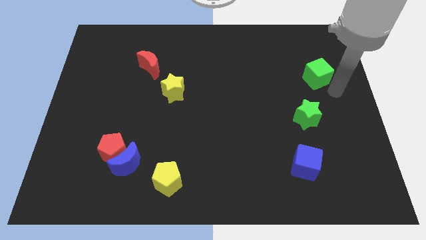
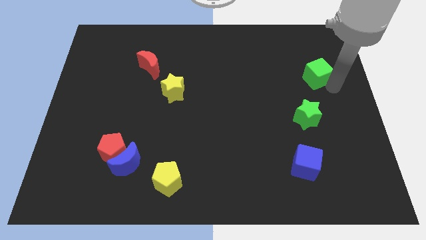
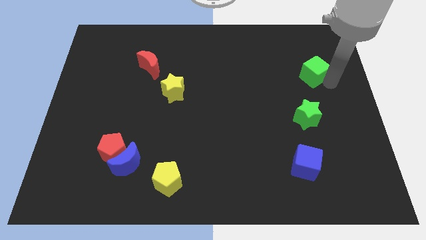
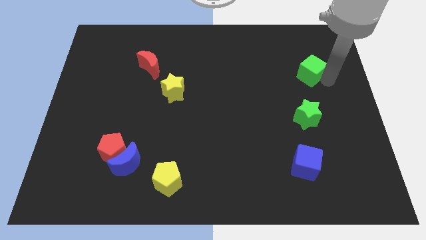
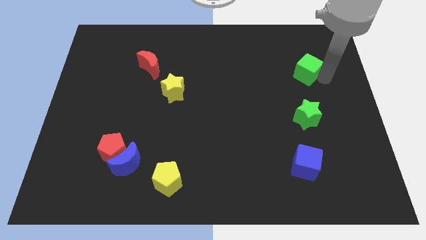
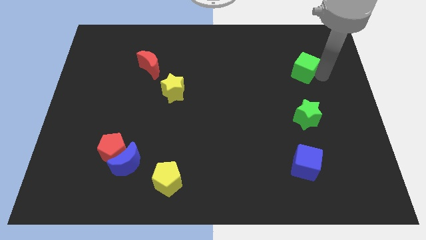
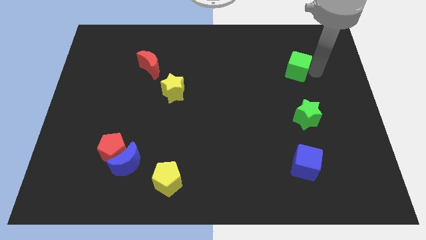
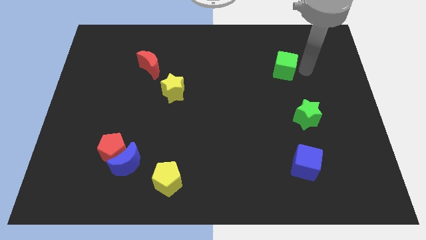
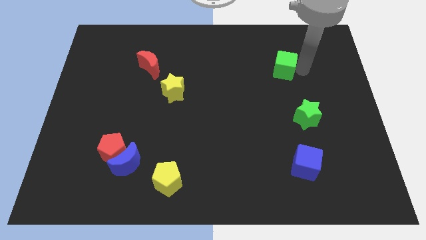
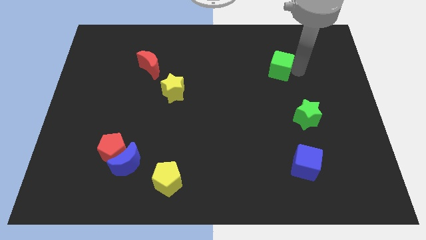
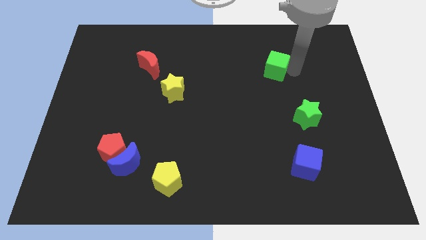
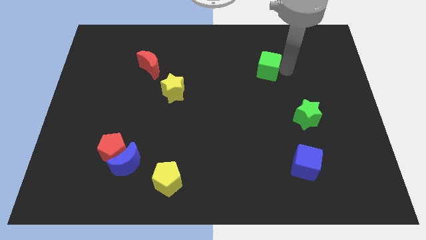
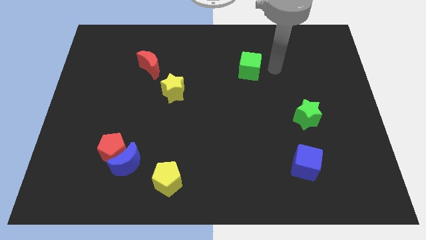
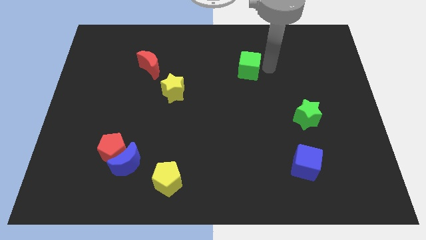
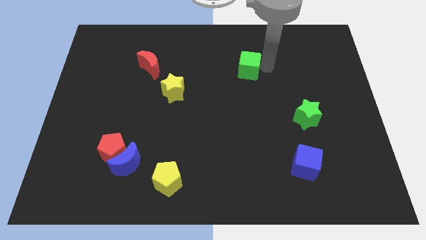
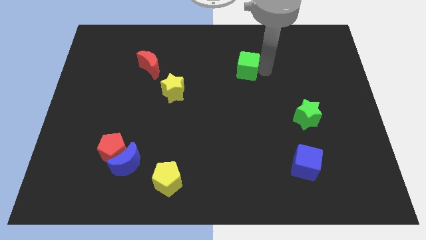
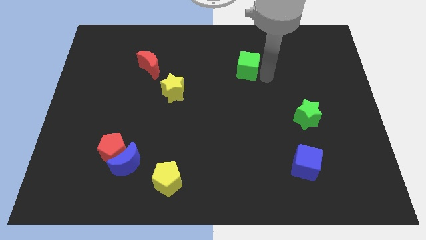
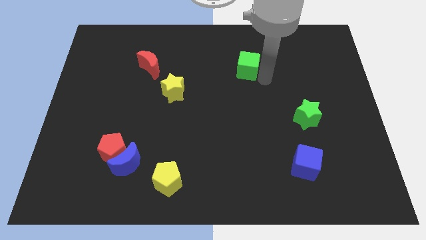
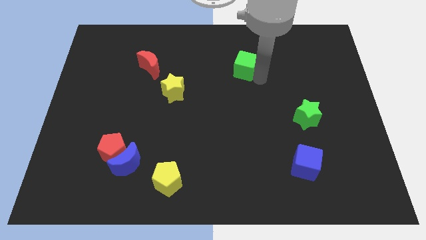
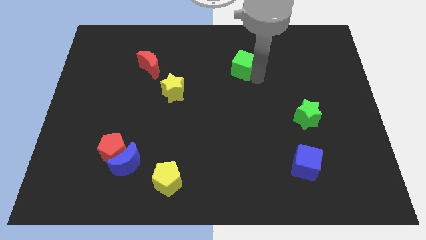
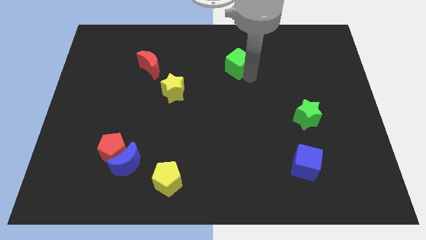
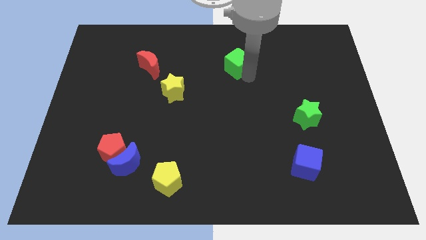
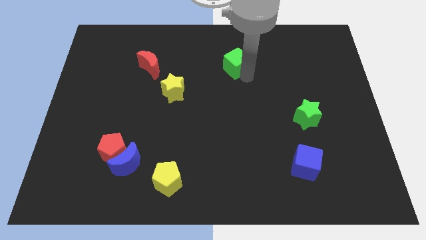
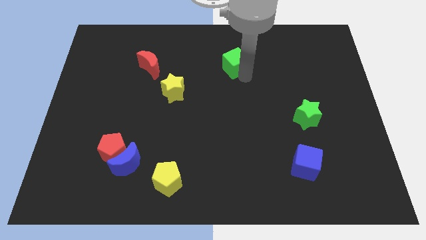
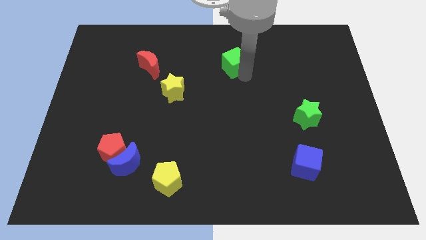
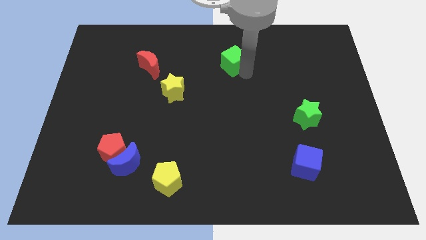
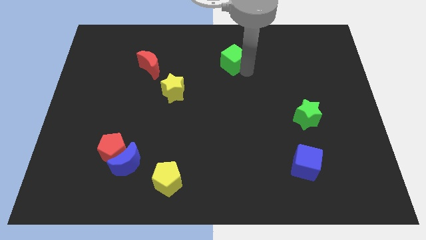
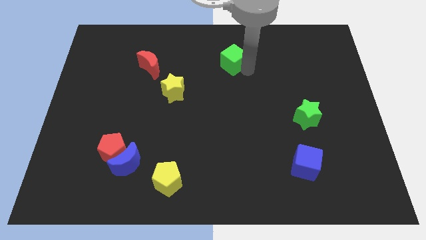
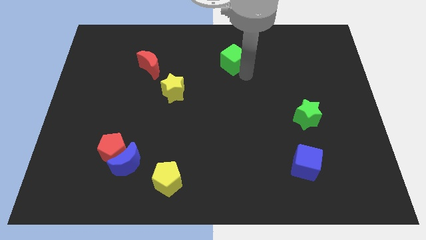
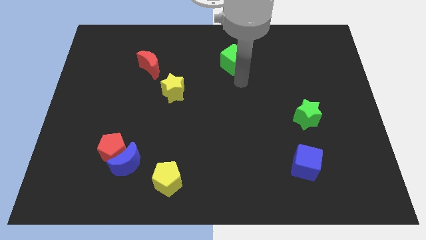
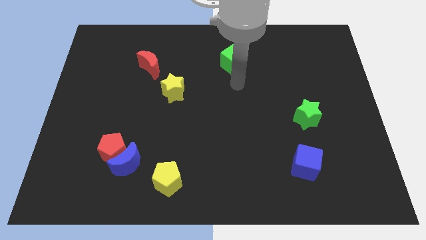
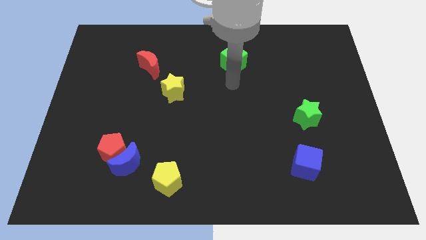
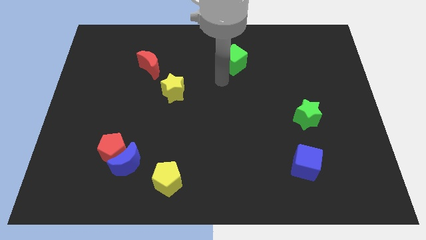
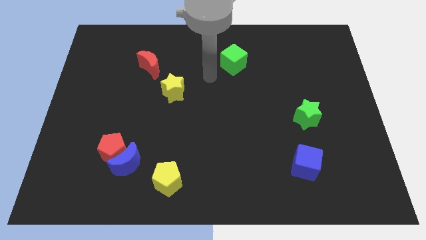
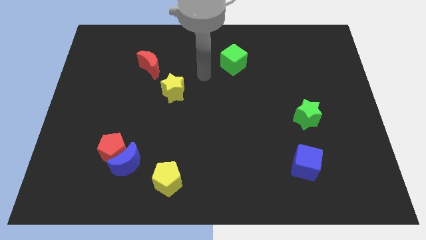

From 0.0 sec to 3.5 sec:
move the green cube to the left side

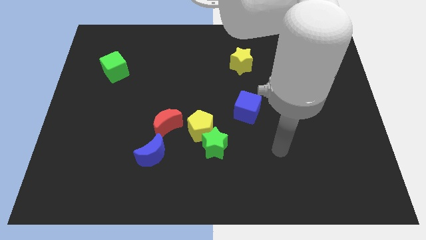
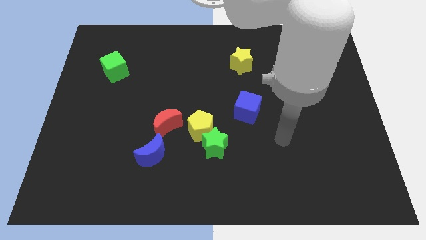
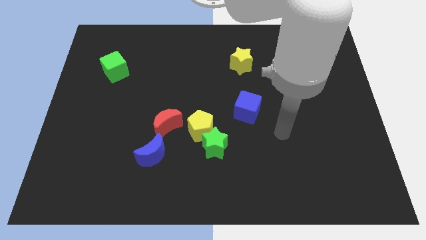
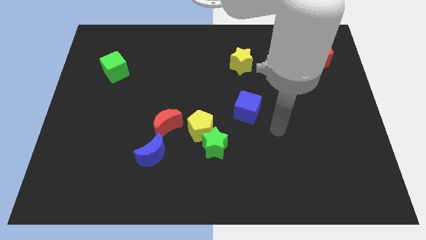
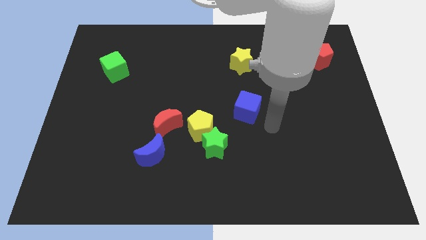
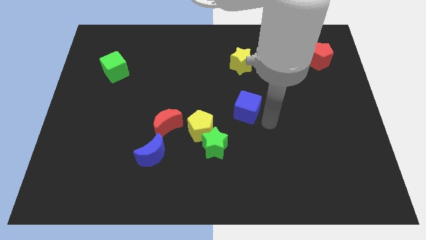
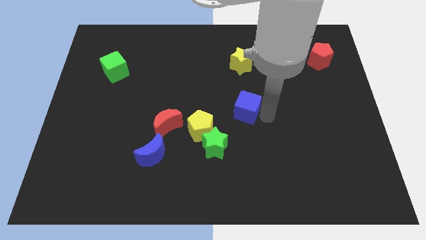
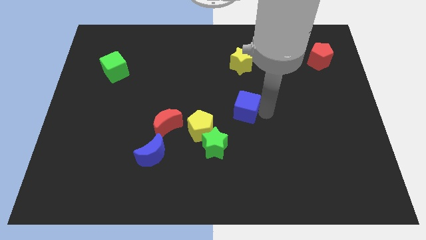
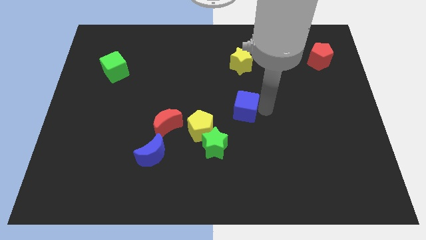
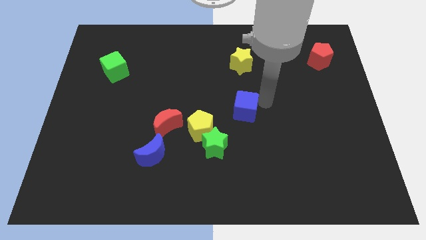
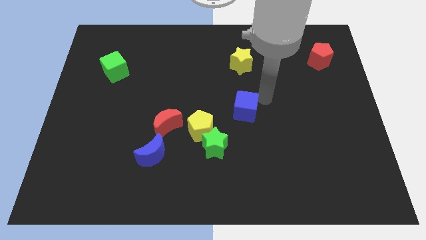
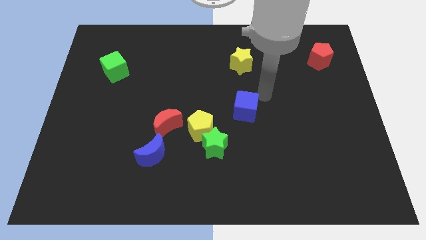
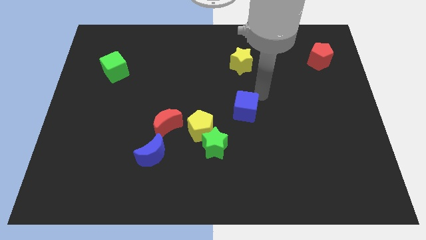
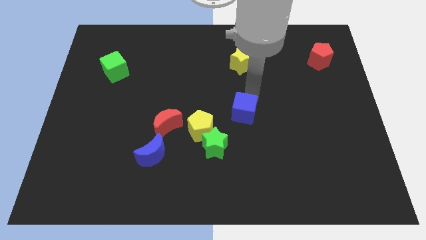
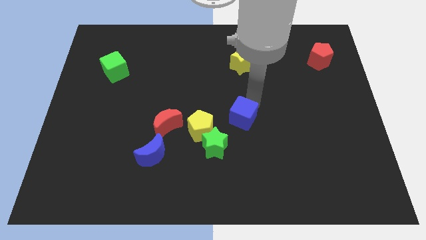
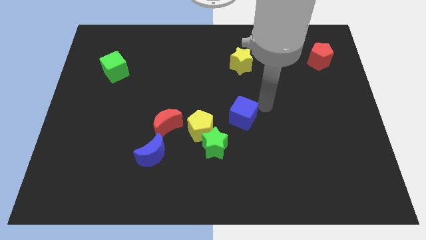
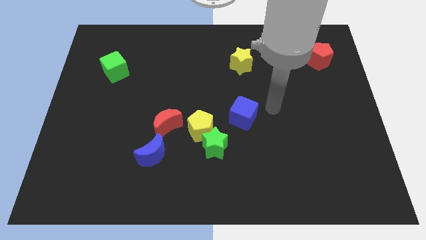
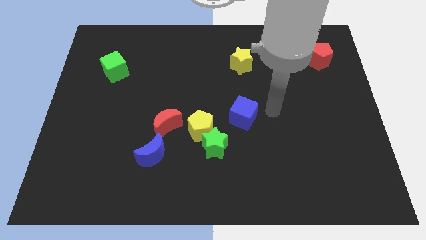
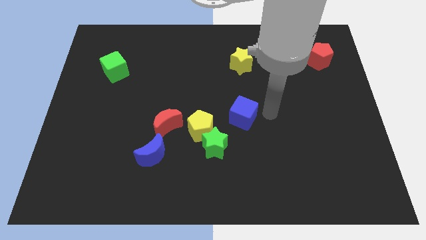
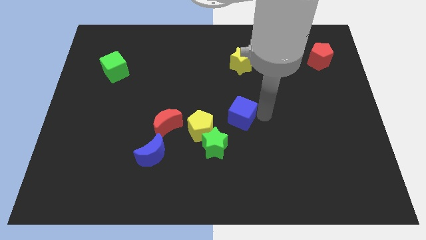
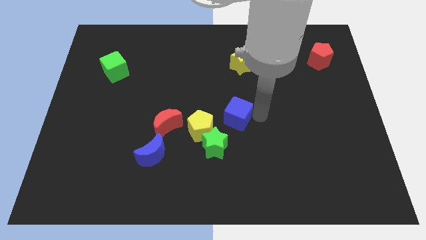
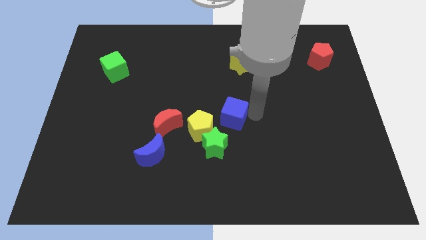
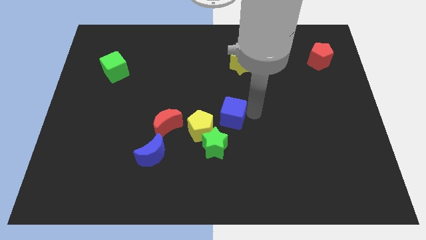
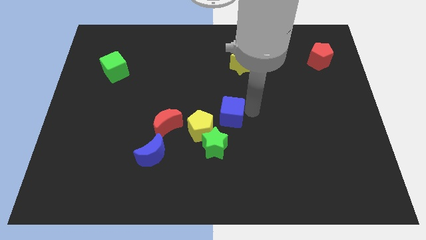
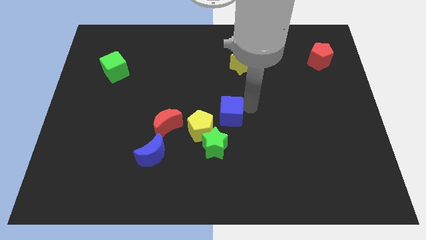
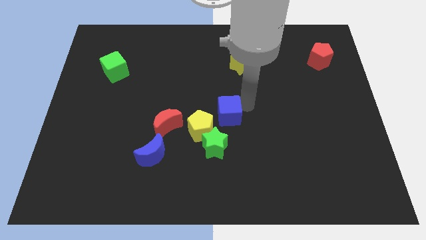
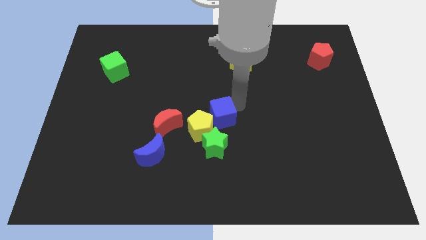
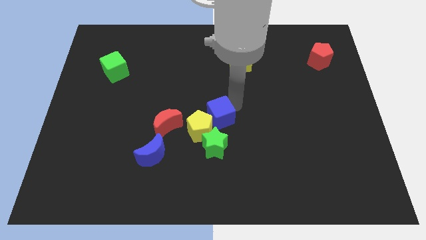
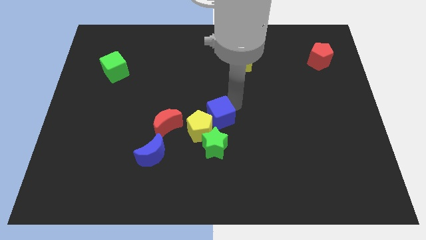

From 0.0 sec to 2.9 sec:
push the blue cube into the yellow pentagon

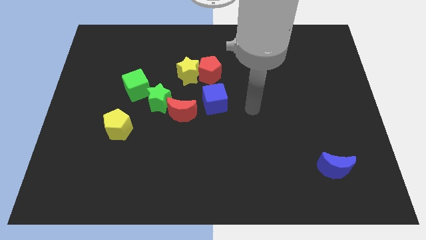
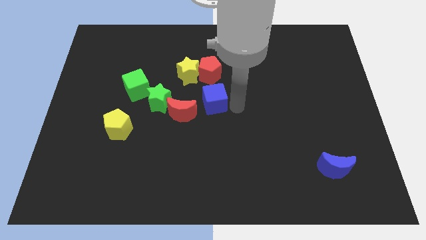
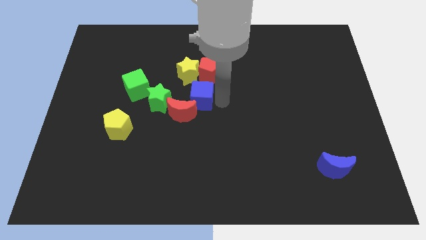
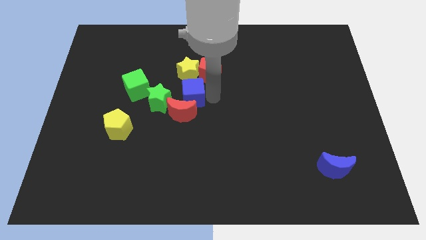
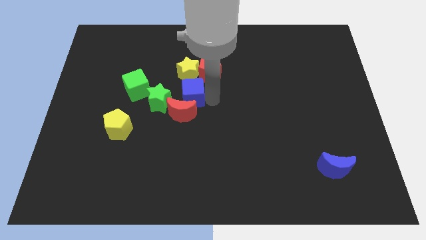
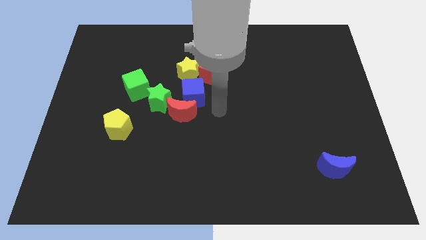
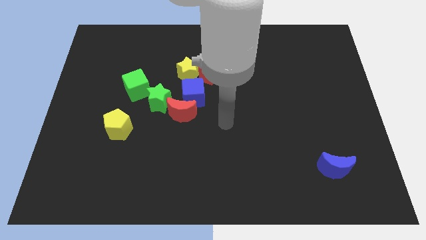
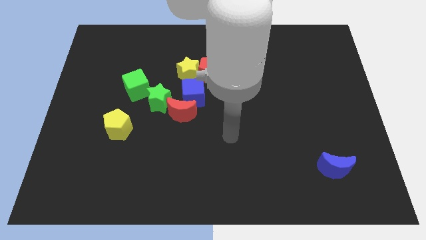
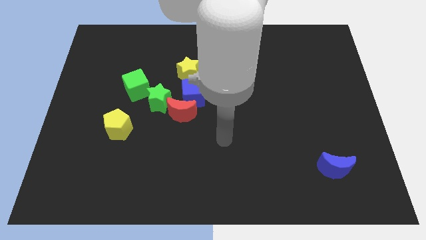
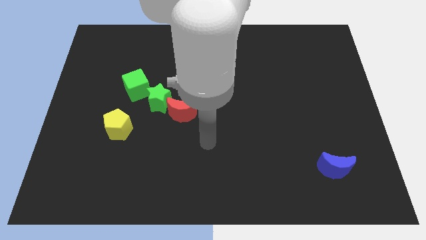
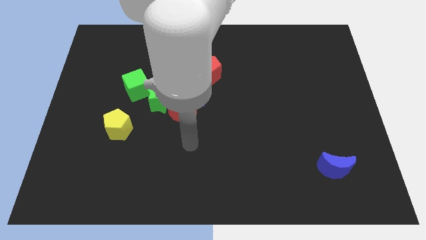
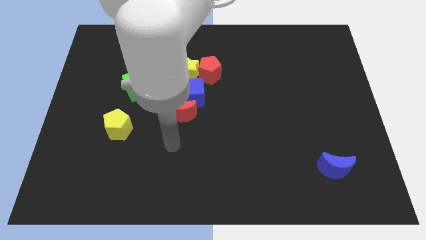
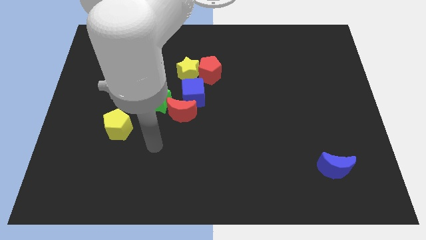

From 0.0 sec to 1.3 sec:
place the blue cube in between the red pentagon and red crescent

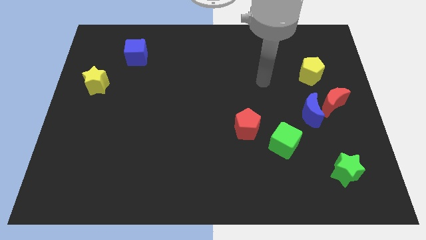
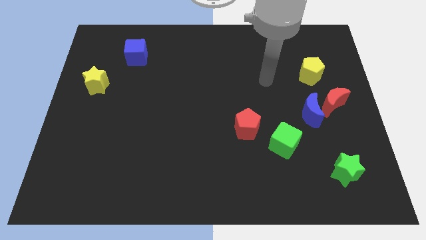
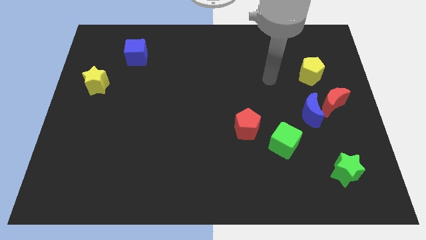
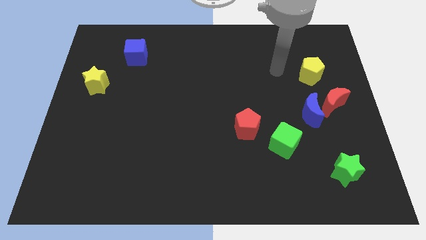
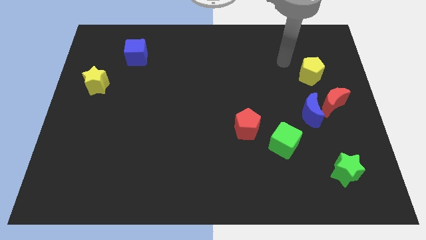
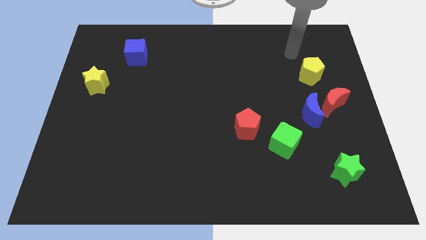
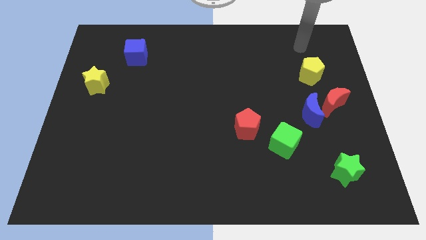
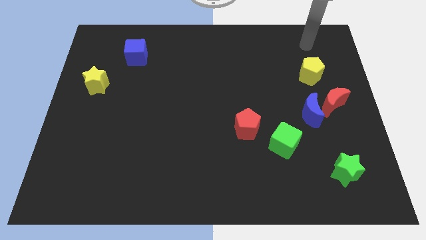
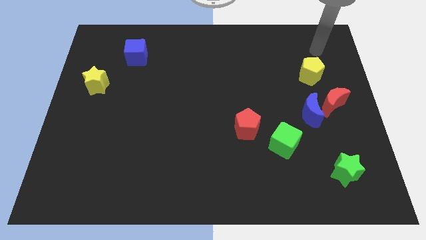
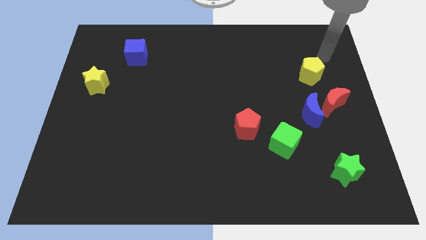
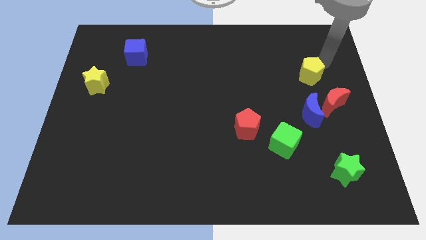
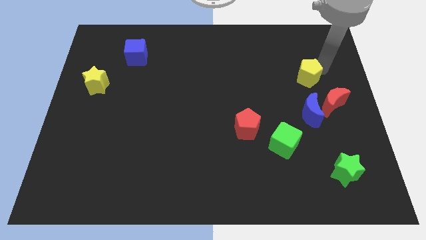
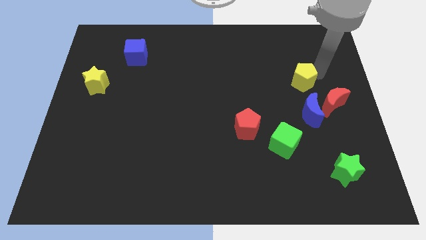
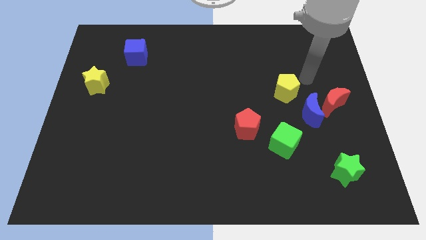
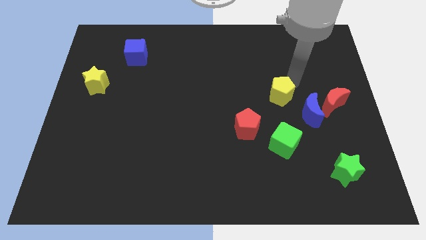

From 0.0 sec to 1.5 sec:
point your arm above yellow pentagon
